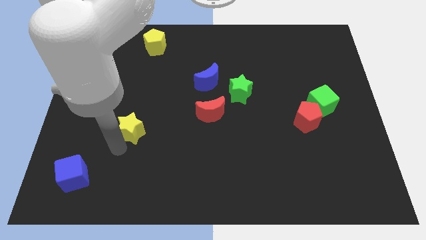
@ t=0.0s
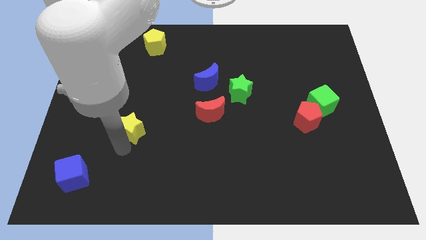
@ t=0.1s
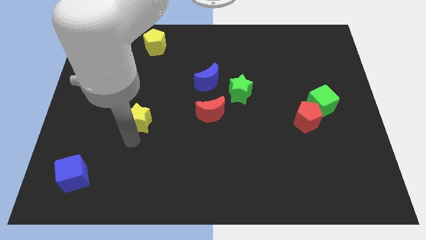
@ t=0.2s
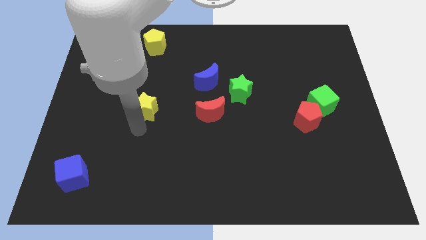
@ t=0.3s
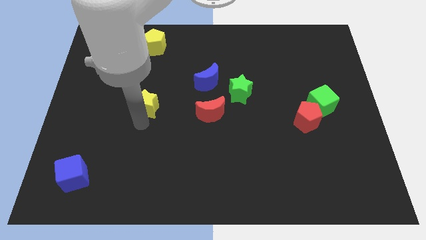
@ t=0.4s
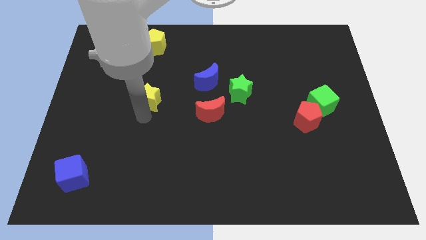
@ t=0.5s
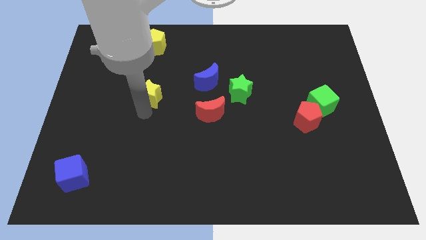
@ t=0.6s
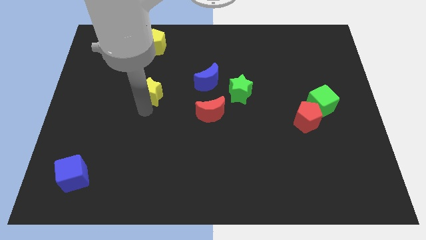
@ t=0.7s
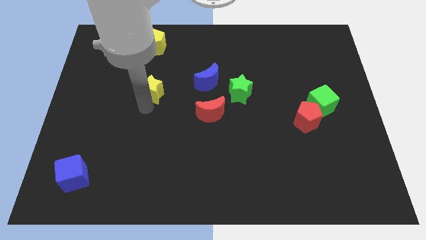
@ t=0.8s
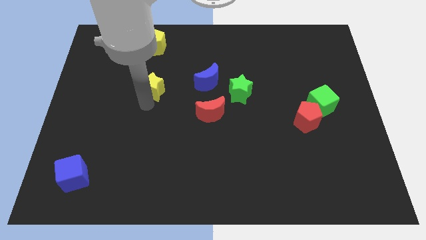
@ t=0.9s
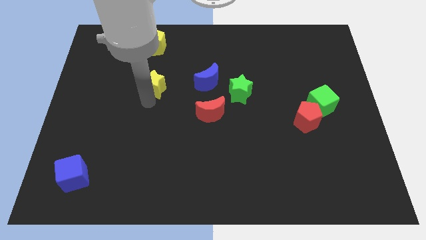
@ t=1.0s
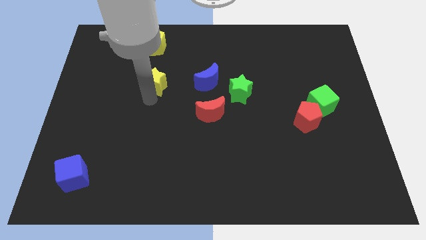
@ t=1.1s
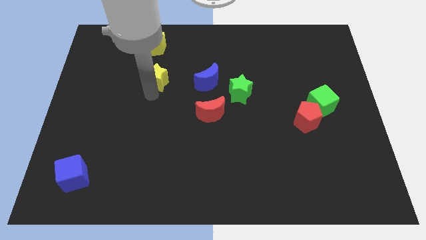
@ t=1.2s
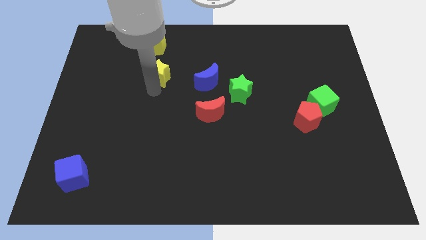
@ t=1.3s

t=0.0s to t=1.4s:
place the yellow star left to the blue moon

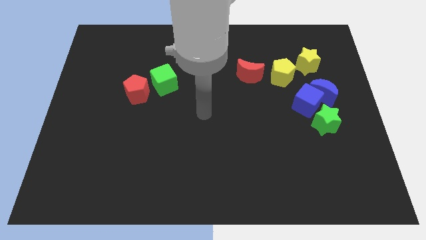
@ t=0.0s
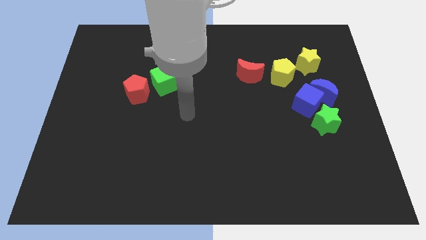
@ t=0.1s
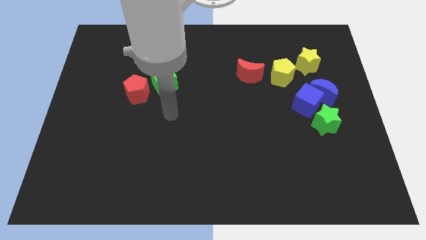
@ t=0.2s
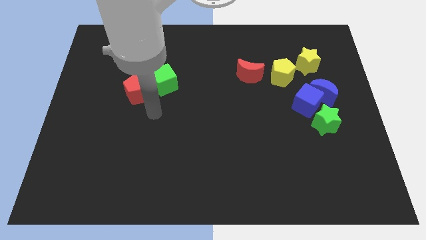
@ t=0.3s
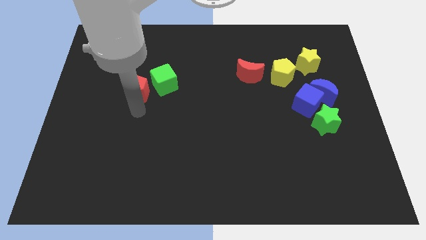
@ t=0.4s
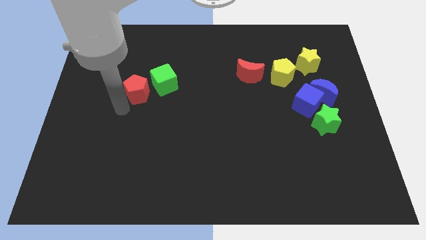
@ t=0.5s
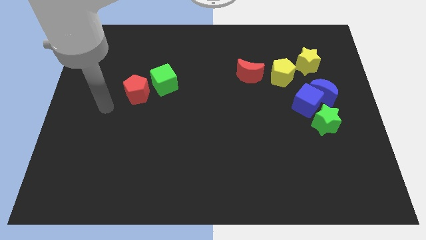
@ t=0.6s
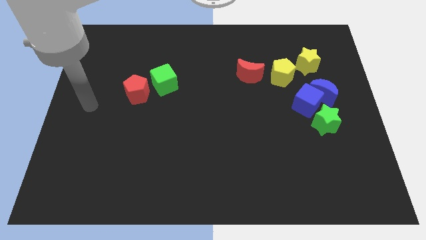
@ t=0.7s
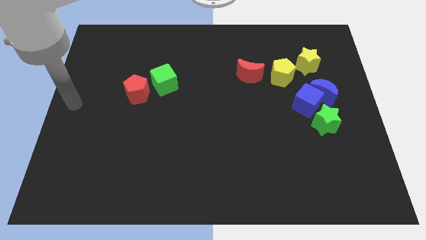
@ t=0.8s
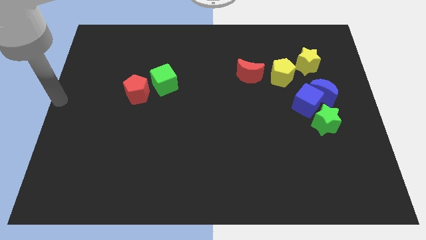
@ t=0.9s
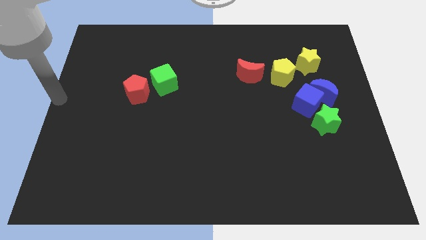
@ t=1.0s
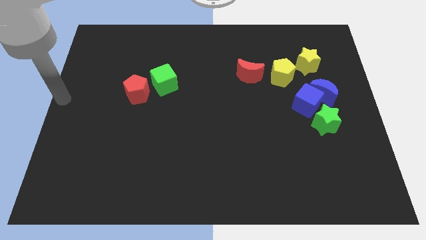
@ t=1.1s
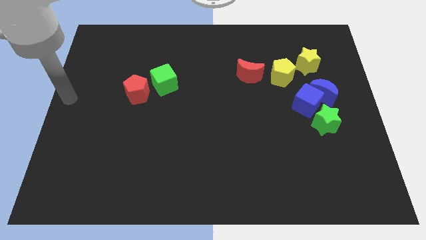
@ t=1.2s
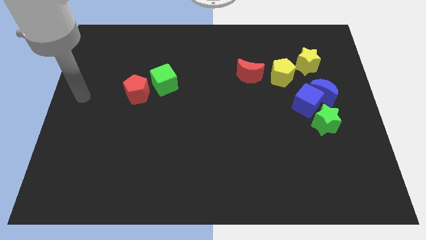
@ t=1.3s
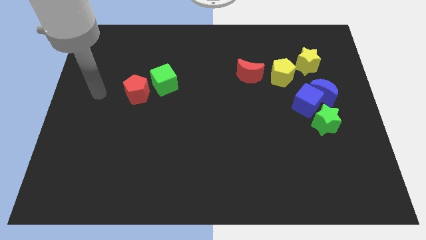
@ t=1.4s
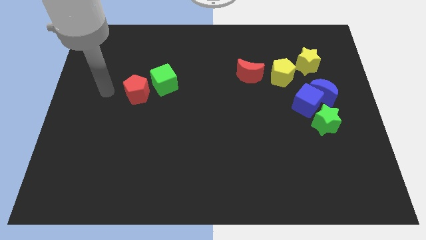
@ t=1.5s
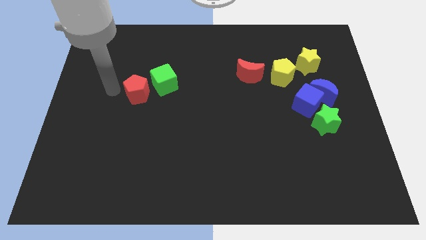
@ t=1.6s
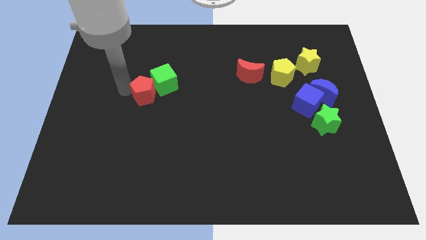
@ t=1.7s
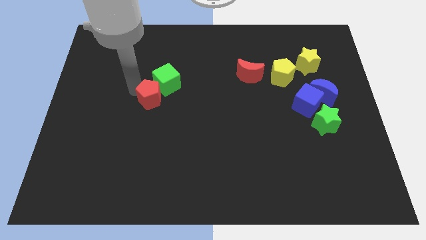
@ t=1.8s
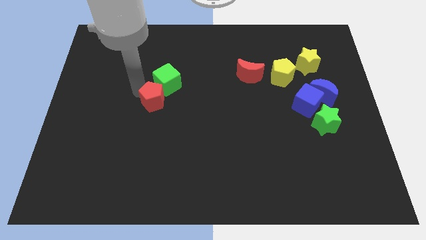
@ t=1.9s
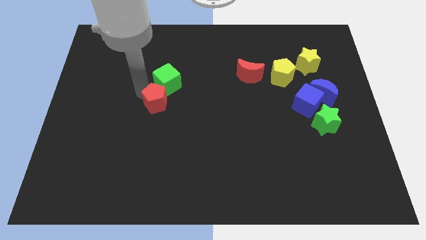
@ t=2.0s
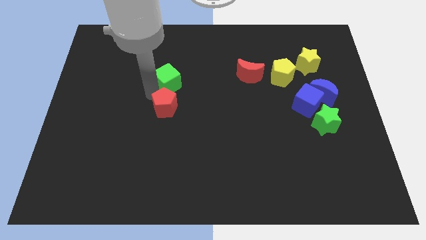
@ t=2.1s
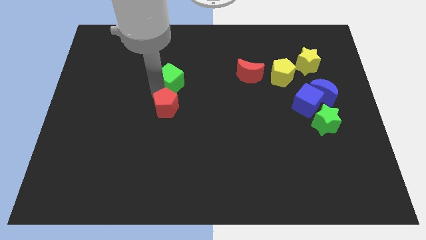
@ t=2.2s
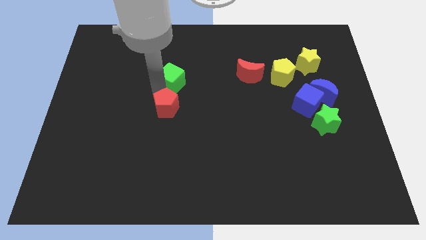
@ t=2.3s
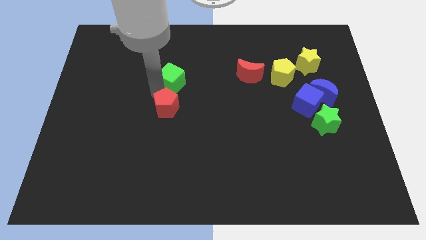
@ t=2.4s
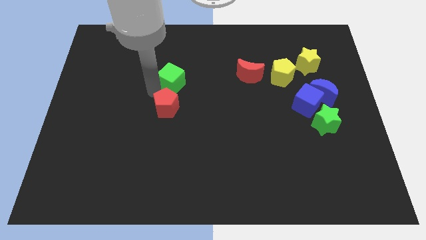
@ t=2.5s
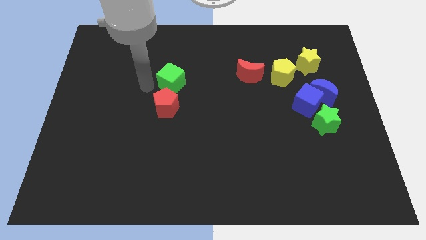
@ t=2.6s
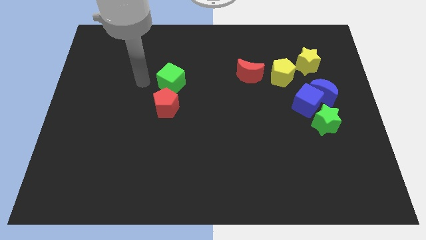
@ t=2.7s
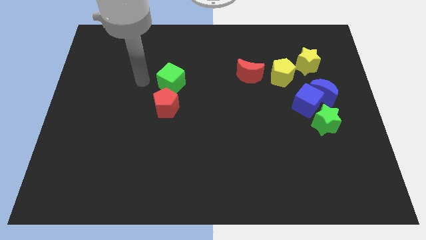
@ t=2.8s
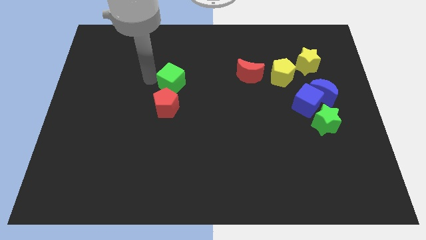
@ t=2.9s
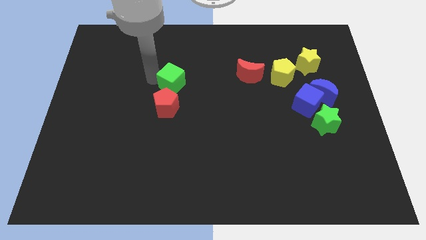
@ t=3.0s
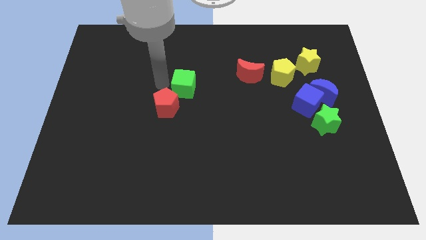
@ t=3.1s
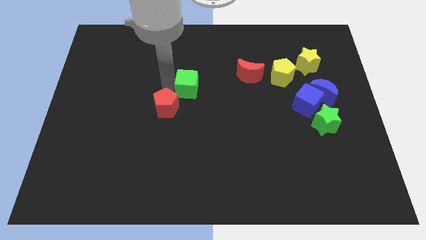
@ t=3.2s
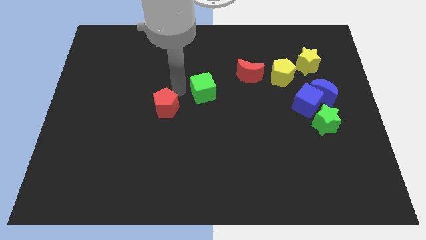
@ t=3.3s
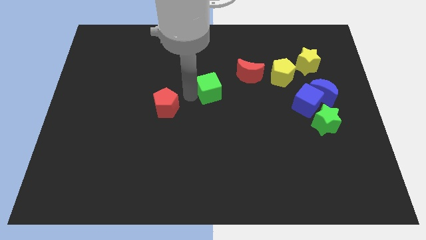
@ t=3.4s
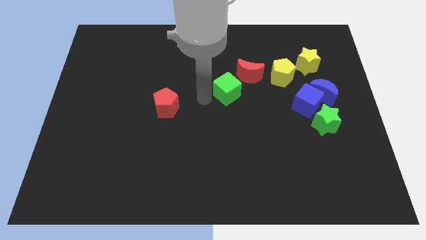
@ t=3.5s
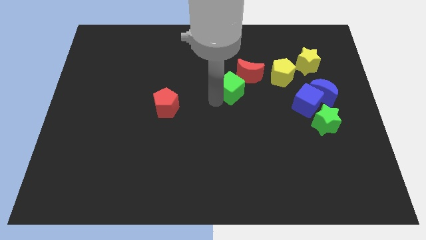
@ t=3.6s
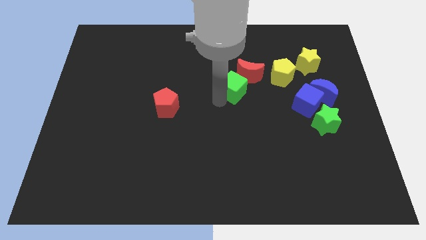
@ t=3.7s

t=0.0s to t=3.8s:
place the green cube below the red crescent

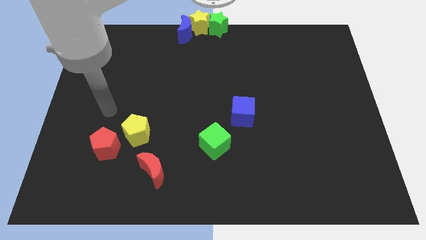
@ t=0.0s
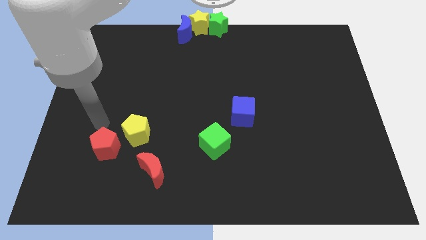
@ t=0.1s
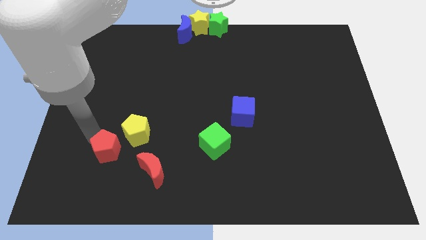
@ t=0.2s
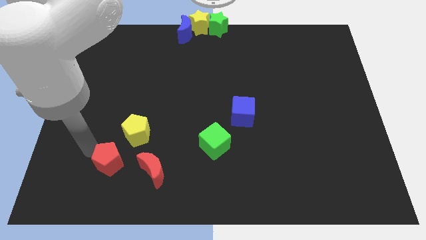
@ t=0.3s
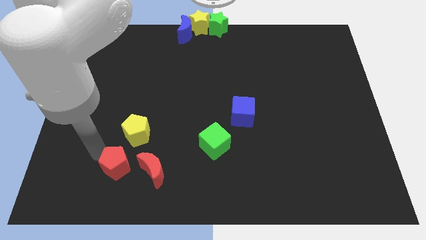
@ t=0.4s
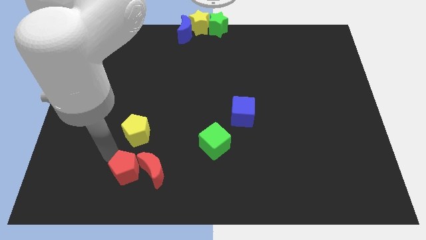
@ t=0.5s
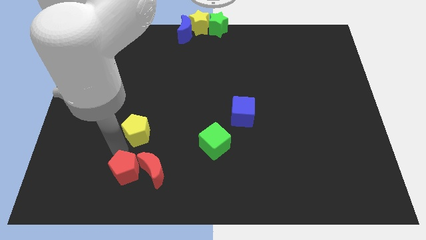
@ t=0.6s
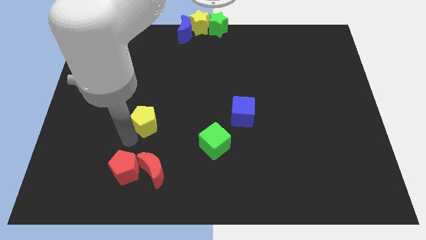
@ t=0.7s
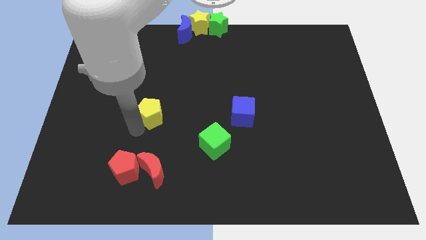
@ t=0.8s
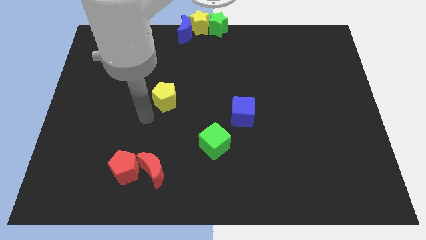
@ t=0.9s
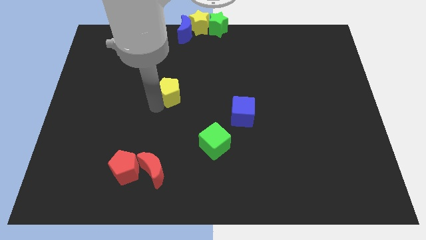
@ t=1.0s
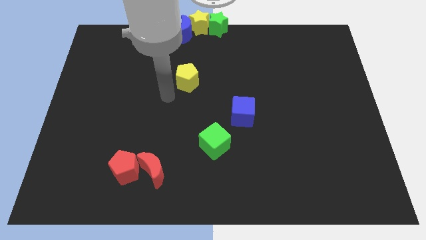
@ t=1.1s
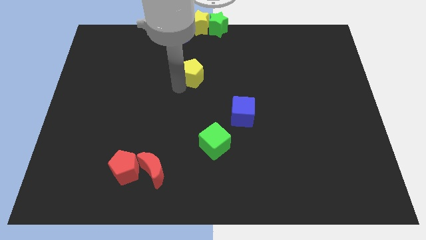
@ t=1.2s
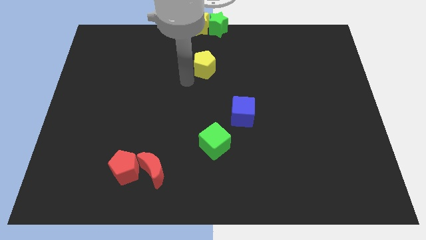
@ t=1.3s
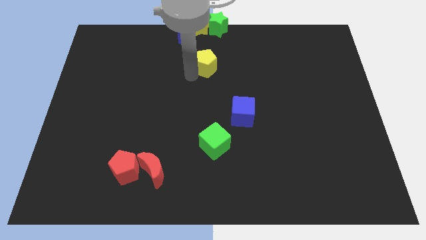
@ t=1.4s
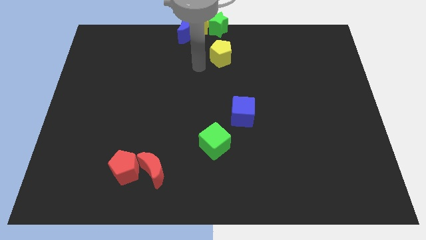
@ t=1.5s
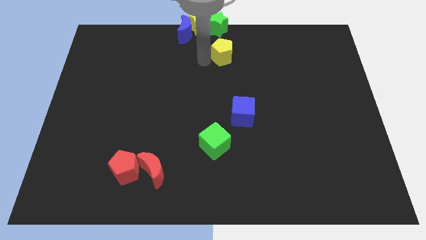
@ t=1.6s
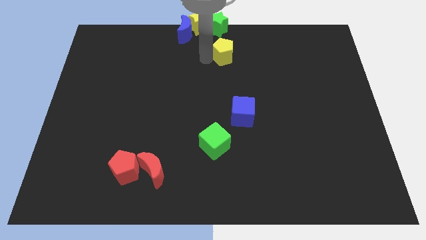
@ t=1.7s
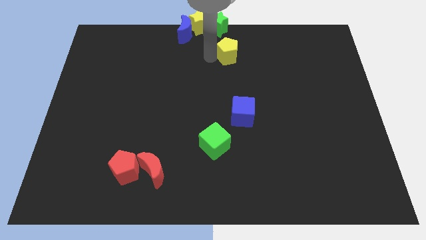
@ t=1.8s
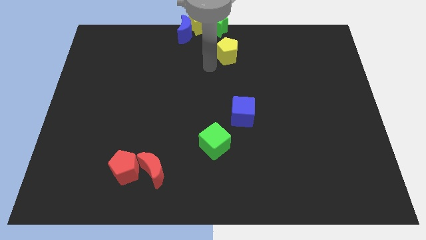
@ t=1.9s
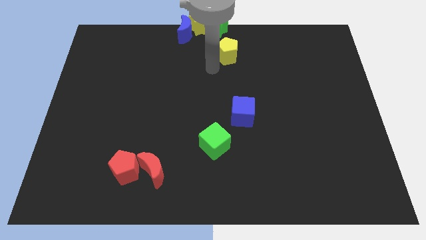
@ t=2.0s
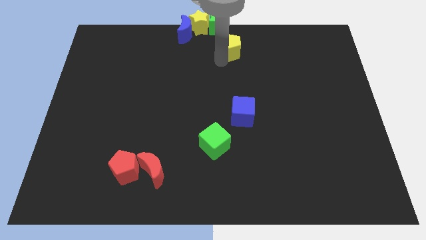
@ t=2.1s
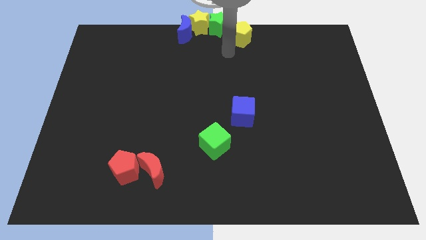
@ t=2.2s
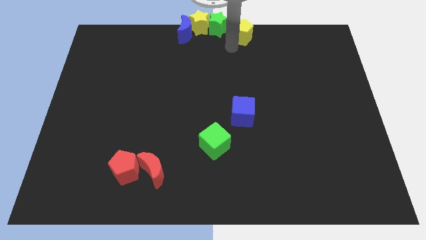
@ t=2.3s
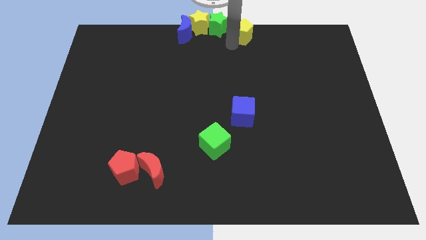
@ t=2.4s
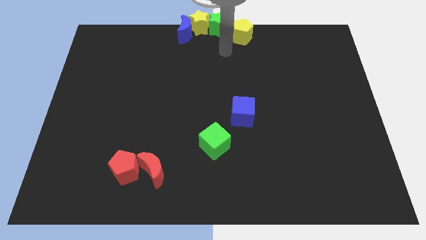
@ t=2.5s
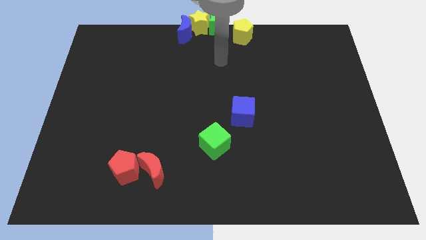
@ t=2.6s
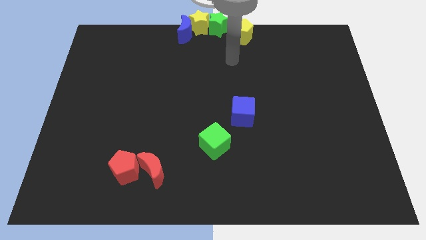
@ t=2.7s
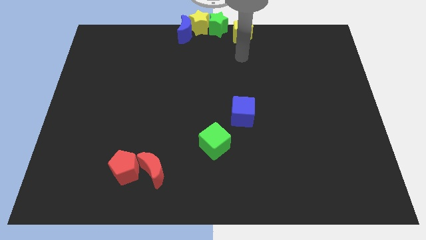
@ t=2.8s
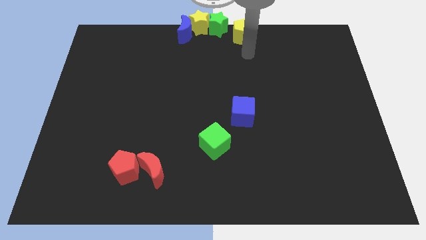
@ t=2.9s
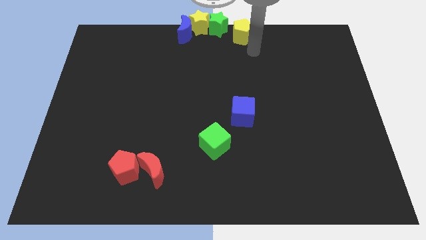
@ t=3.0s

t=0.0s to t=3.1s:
move yellow pentagon near to the green star

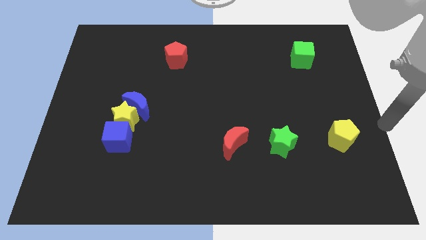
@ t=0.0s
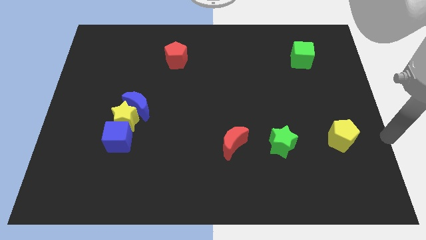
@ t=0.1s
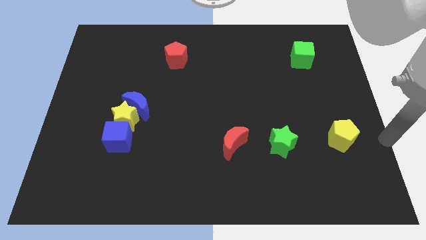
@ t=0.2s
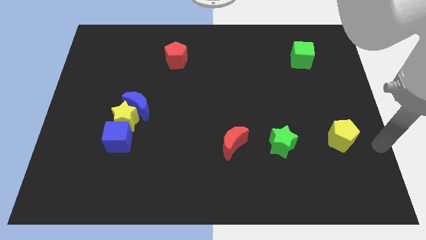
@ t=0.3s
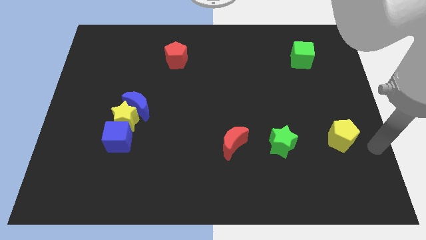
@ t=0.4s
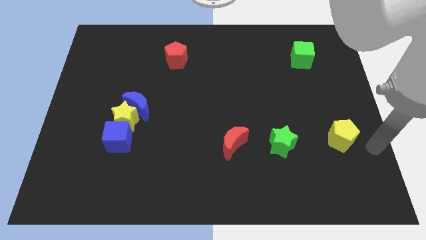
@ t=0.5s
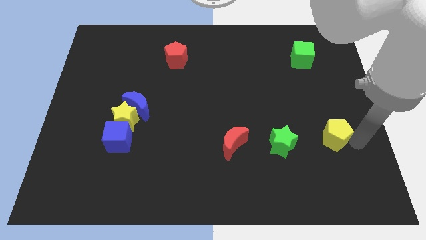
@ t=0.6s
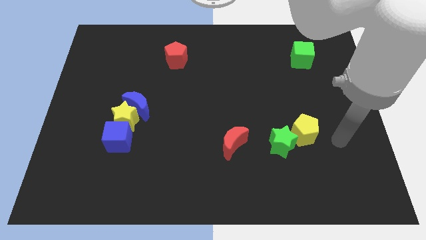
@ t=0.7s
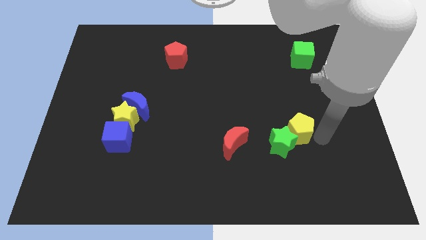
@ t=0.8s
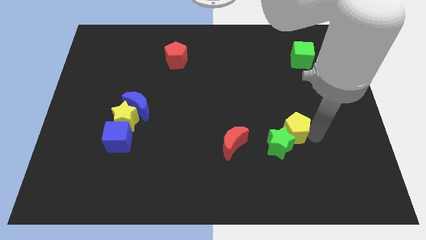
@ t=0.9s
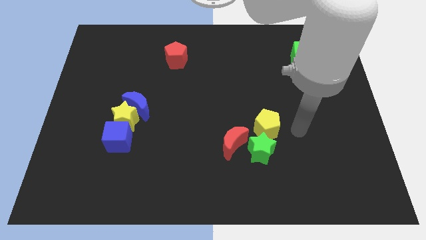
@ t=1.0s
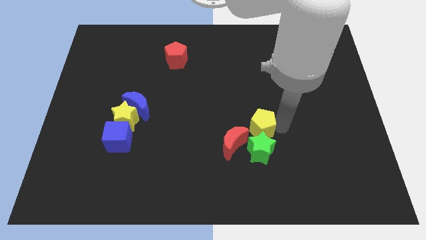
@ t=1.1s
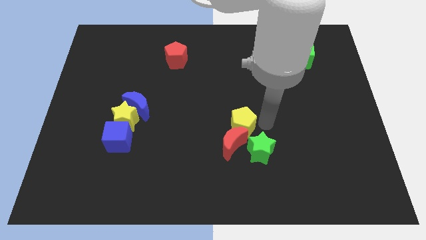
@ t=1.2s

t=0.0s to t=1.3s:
push the yellow pentagon into the top side of the red moon
